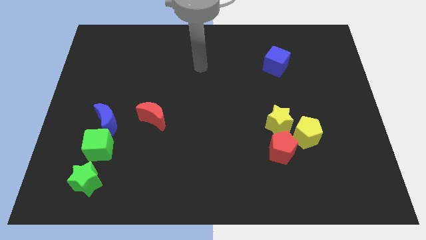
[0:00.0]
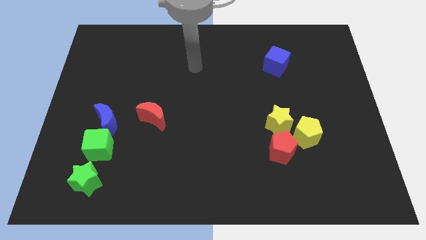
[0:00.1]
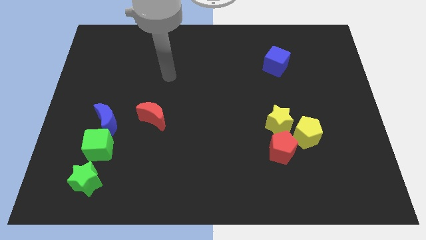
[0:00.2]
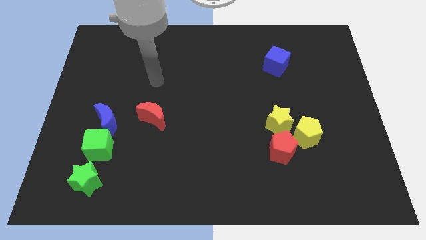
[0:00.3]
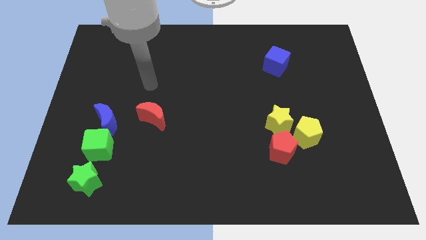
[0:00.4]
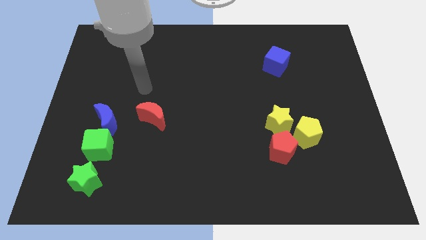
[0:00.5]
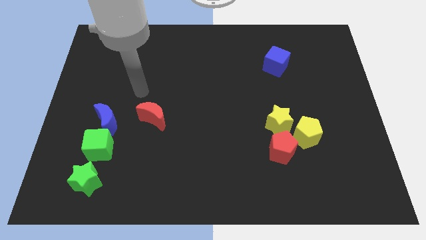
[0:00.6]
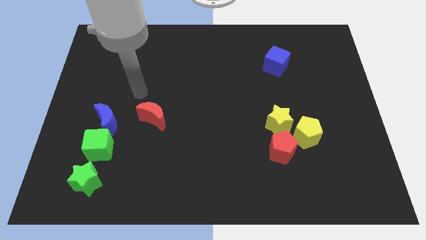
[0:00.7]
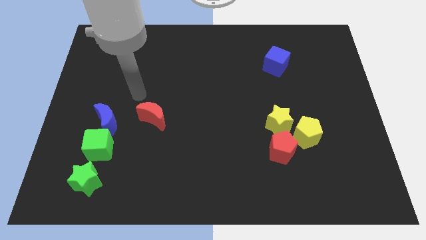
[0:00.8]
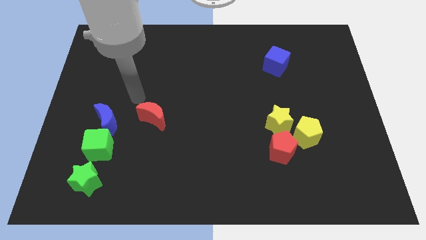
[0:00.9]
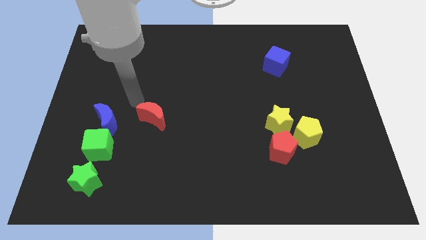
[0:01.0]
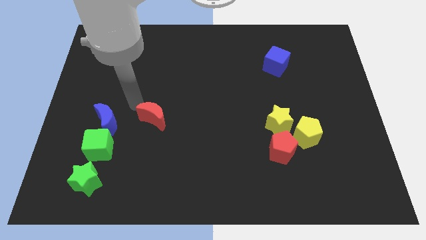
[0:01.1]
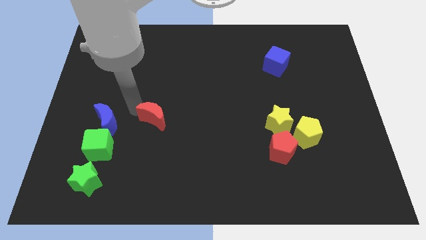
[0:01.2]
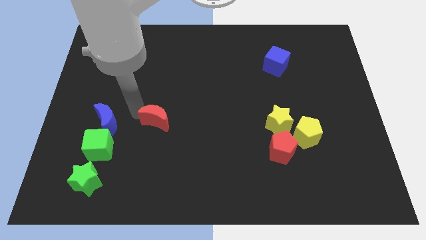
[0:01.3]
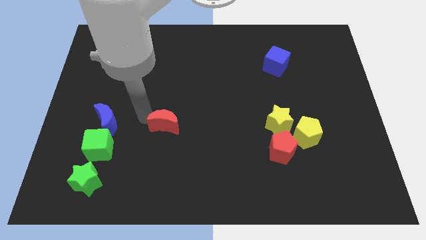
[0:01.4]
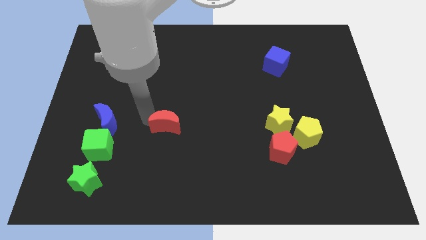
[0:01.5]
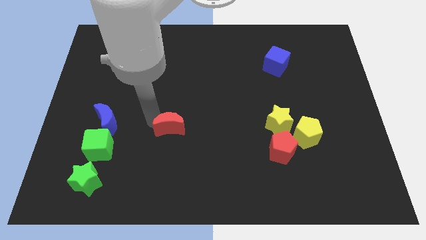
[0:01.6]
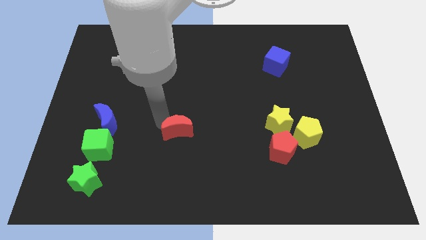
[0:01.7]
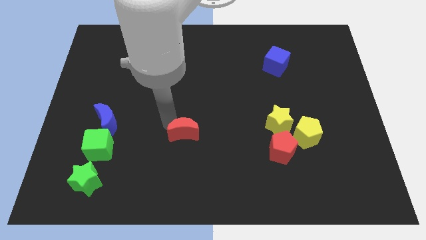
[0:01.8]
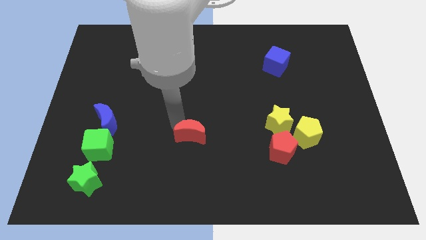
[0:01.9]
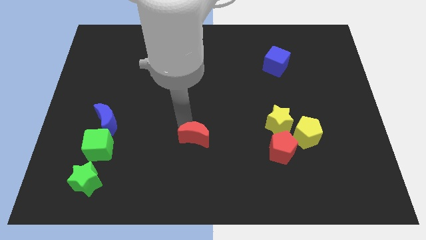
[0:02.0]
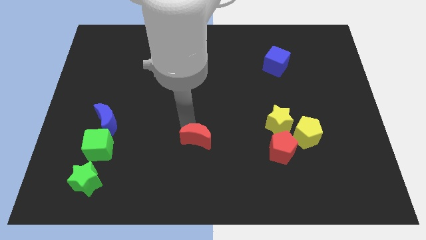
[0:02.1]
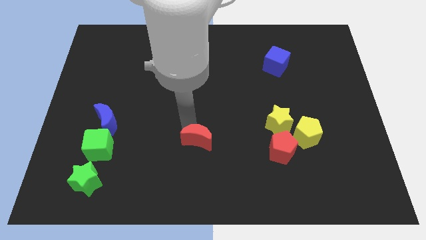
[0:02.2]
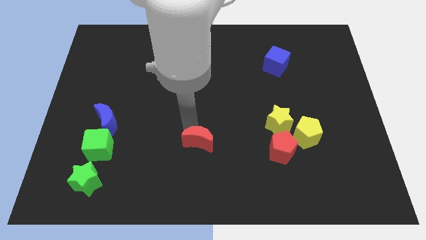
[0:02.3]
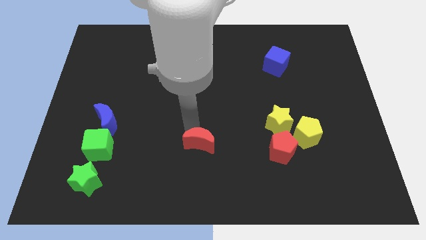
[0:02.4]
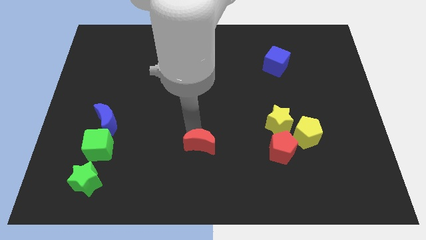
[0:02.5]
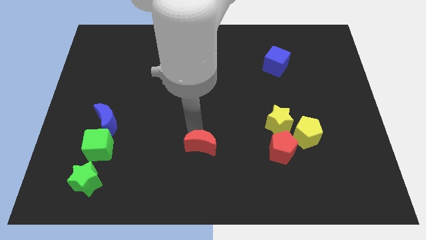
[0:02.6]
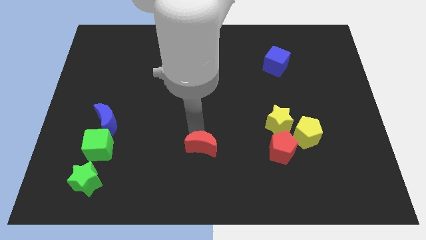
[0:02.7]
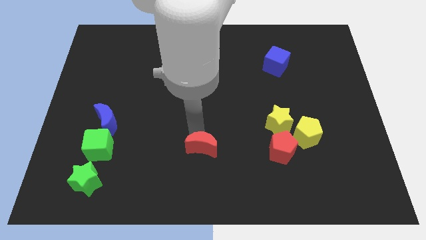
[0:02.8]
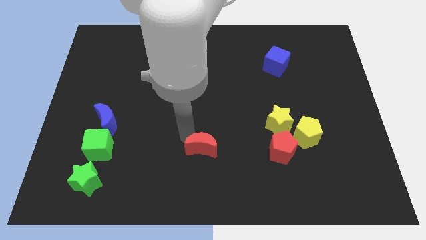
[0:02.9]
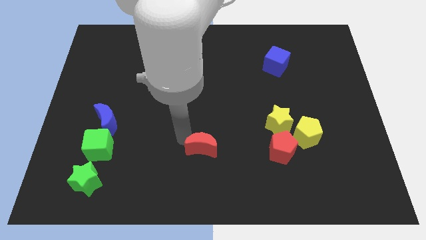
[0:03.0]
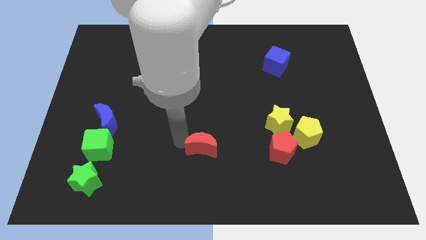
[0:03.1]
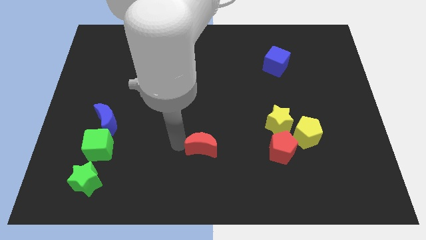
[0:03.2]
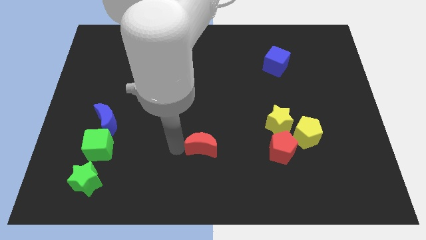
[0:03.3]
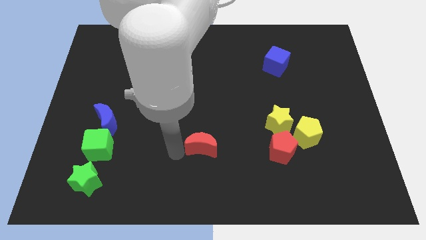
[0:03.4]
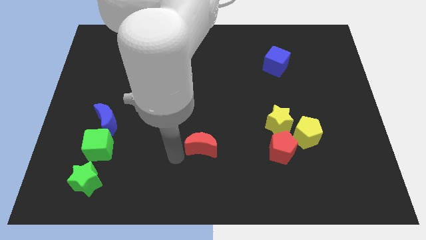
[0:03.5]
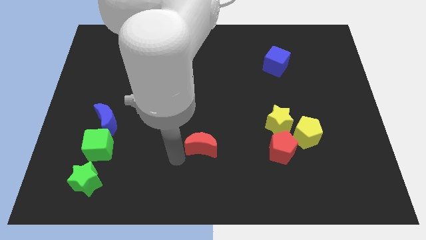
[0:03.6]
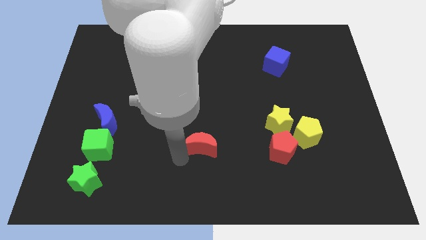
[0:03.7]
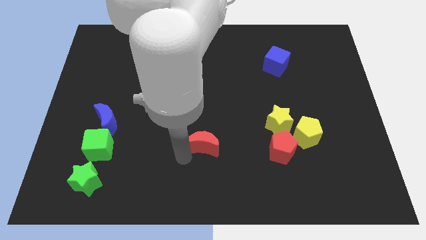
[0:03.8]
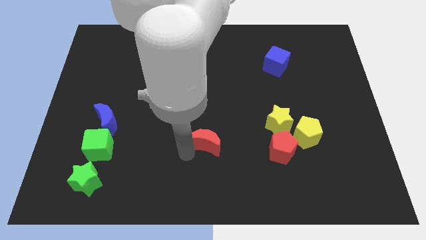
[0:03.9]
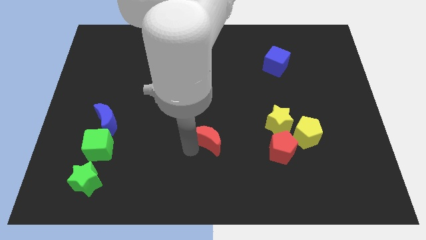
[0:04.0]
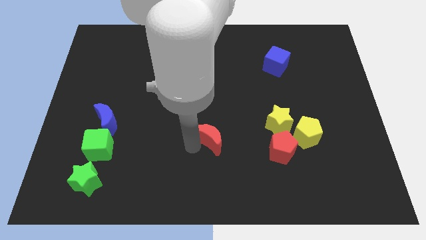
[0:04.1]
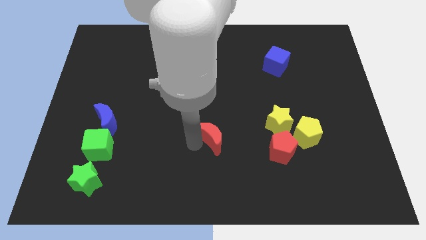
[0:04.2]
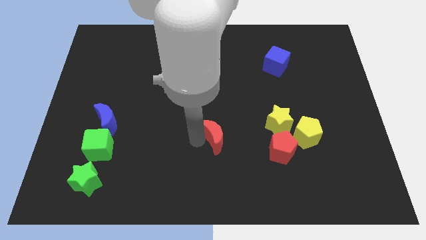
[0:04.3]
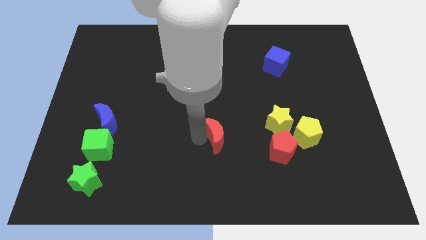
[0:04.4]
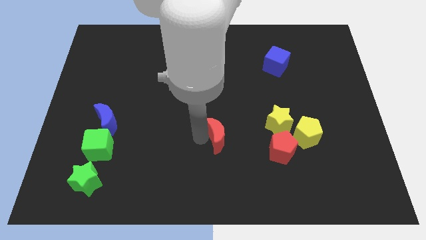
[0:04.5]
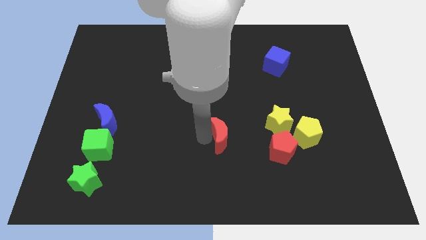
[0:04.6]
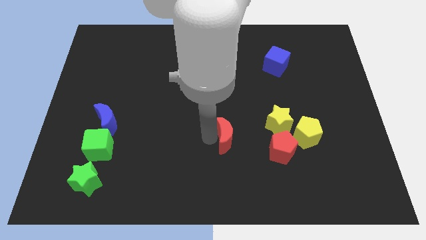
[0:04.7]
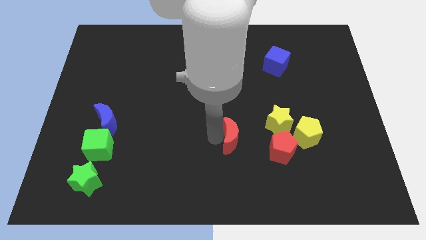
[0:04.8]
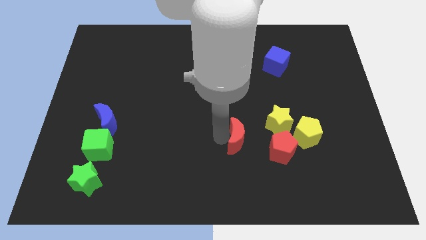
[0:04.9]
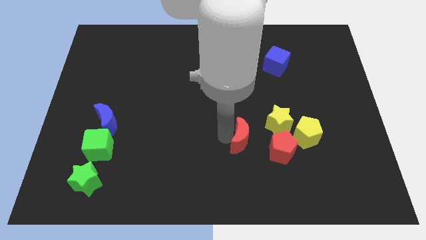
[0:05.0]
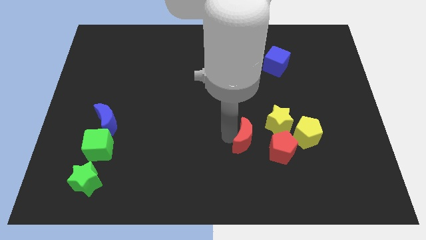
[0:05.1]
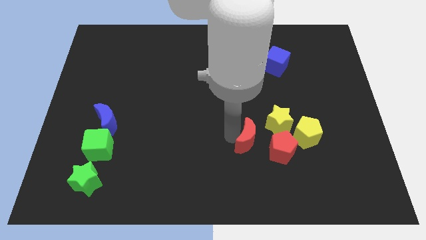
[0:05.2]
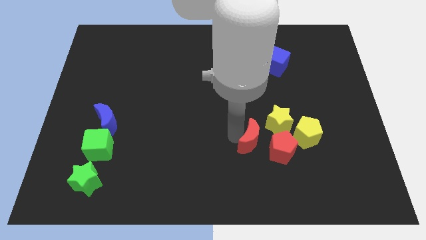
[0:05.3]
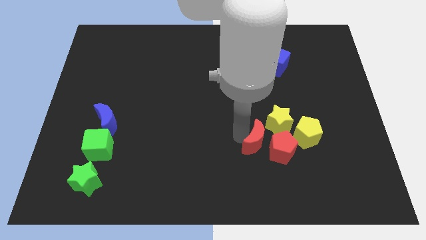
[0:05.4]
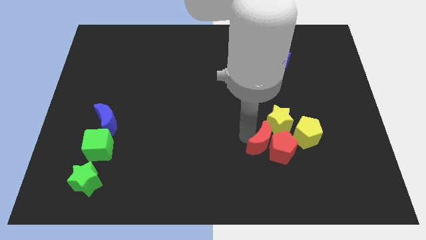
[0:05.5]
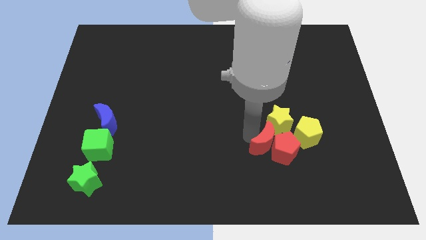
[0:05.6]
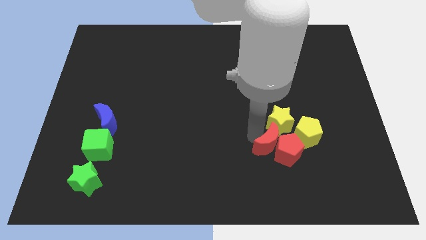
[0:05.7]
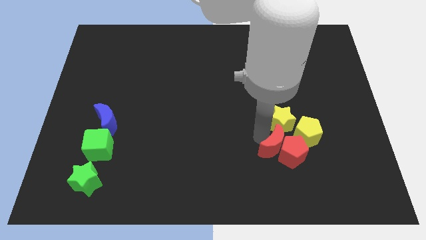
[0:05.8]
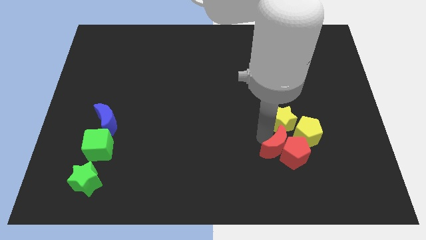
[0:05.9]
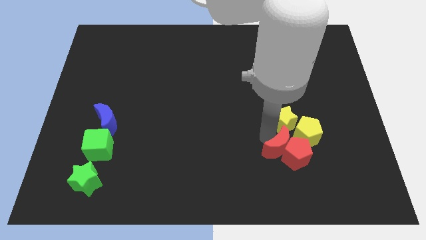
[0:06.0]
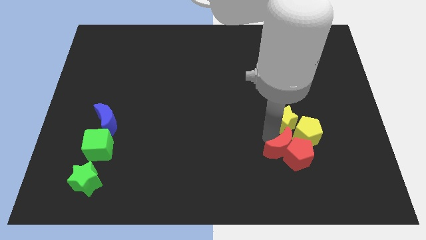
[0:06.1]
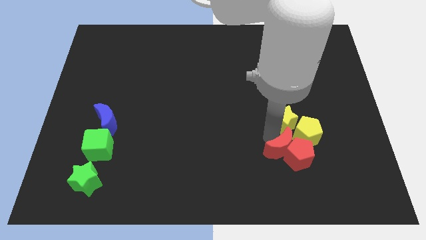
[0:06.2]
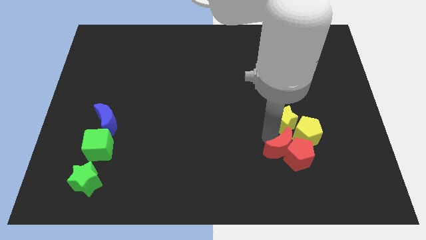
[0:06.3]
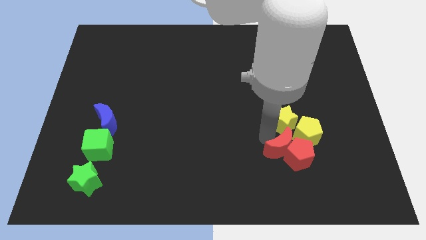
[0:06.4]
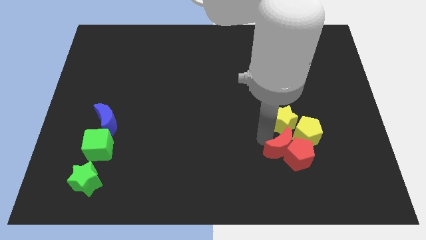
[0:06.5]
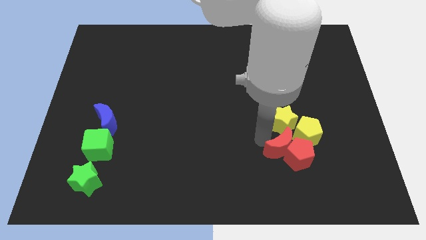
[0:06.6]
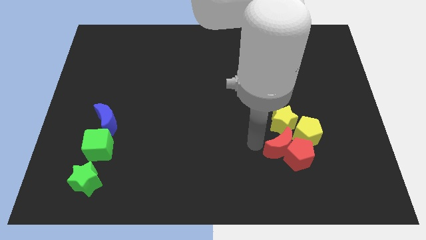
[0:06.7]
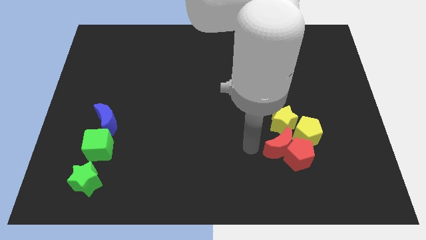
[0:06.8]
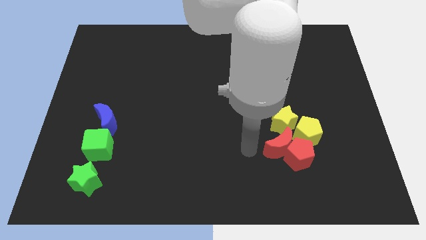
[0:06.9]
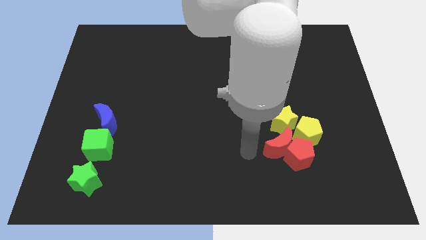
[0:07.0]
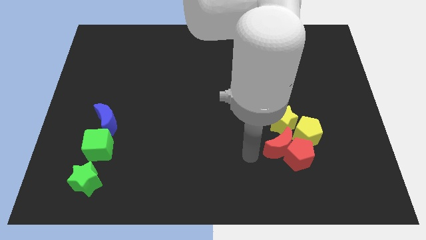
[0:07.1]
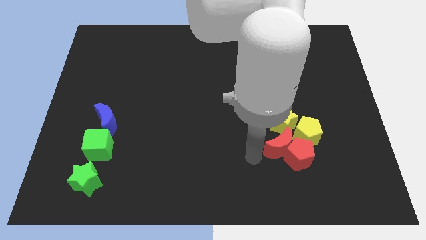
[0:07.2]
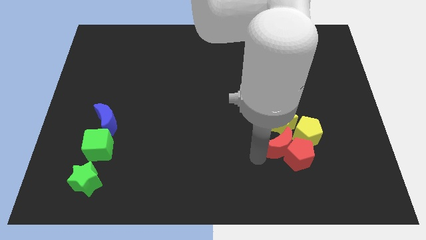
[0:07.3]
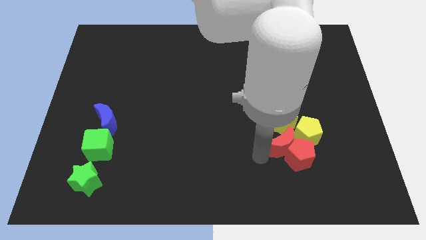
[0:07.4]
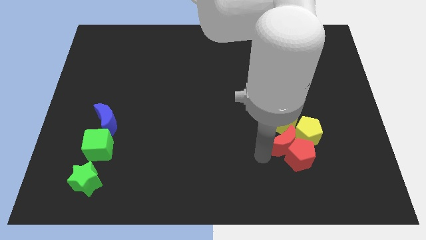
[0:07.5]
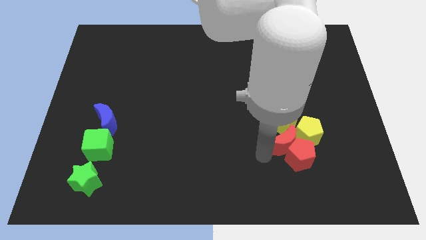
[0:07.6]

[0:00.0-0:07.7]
move the red moon towards the yellow pentagon

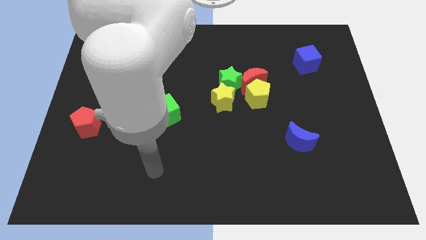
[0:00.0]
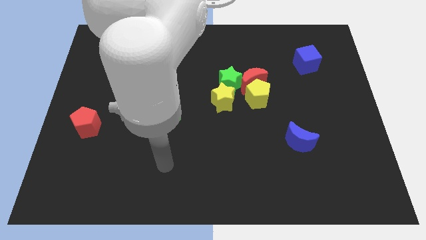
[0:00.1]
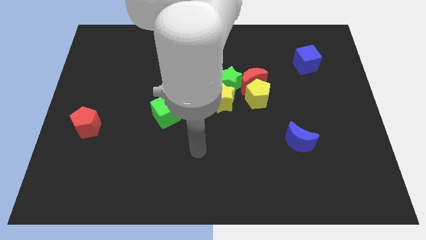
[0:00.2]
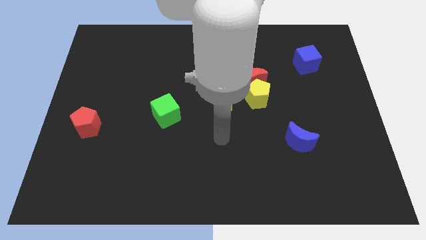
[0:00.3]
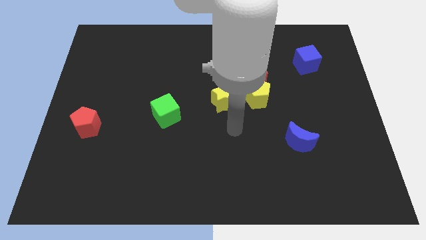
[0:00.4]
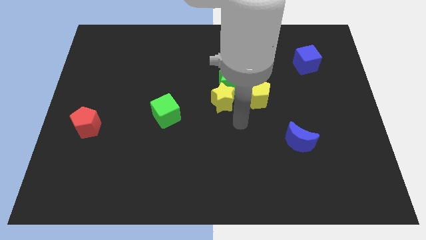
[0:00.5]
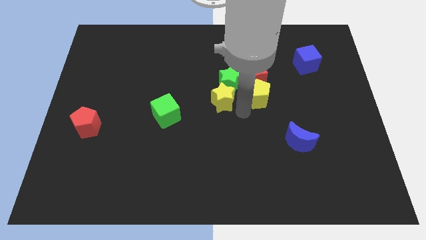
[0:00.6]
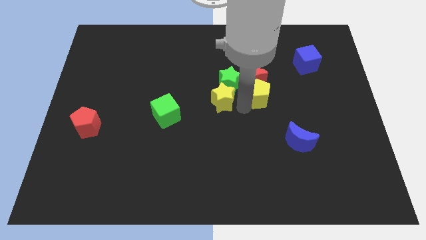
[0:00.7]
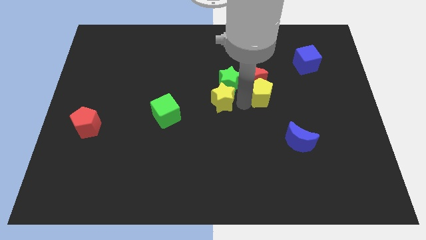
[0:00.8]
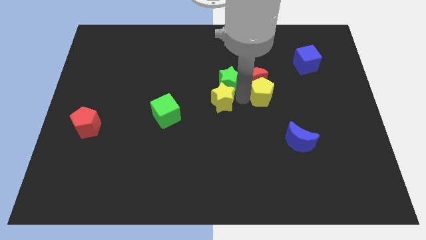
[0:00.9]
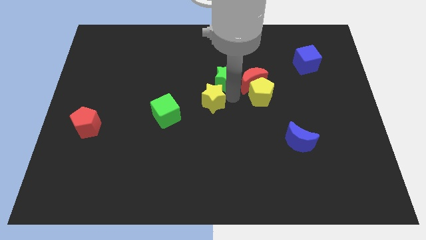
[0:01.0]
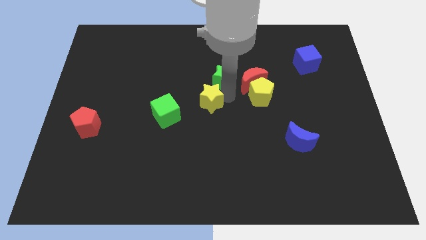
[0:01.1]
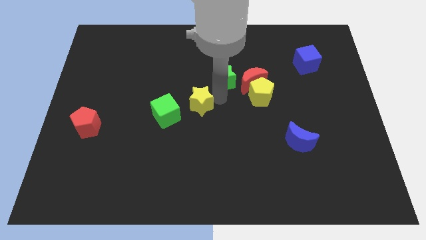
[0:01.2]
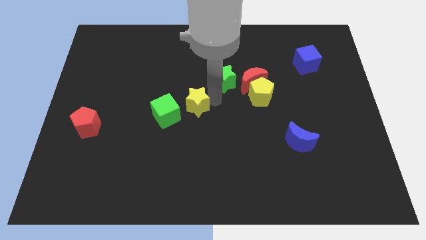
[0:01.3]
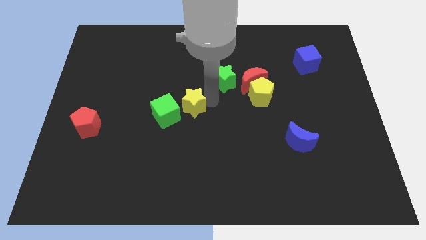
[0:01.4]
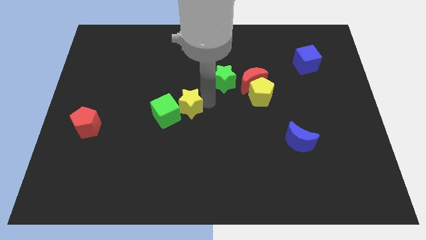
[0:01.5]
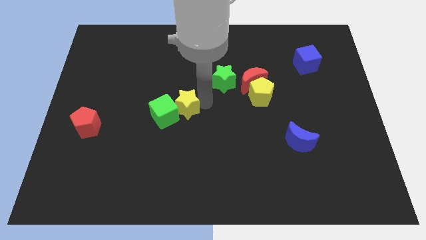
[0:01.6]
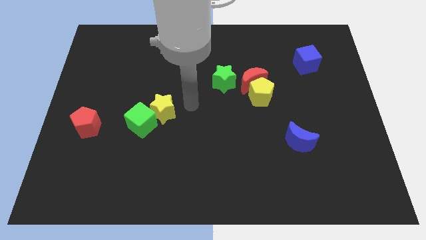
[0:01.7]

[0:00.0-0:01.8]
move the yellow star close to the green cube
